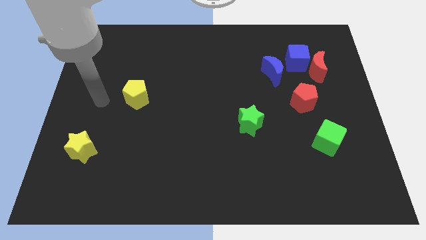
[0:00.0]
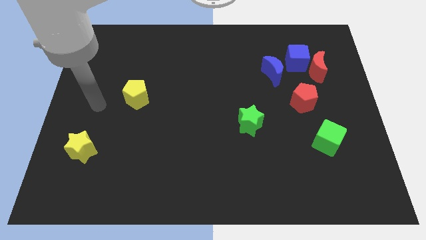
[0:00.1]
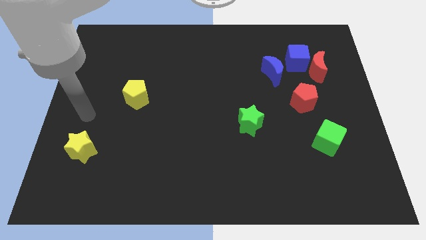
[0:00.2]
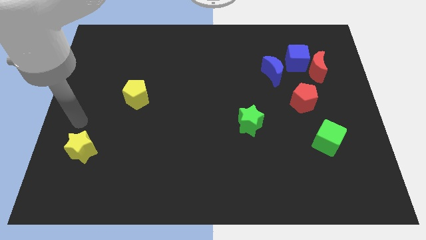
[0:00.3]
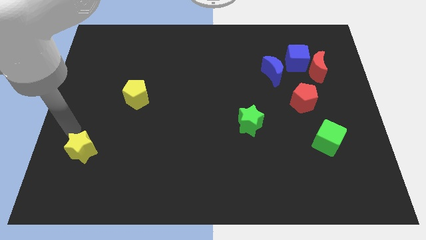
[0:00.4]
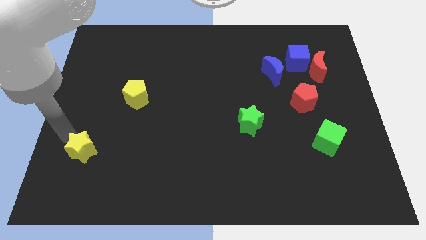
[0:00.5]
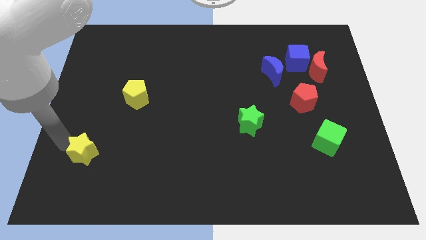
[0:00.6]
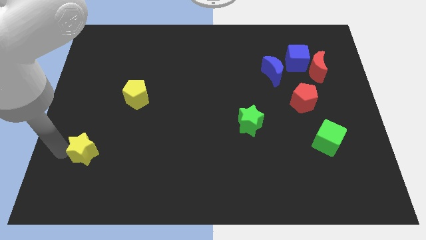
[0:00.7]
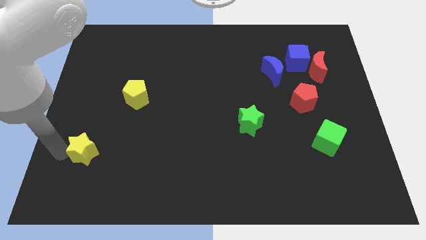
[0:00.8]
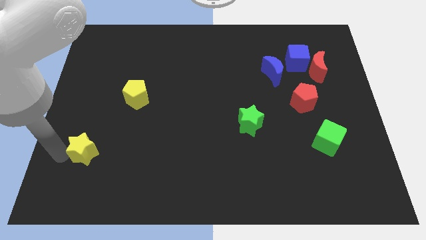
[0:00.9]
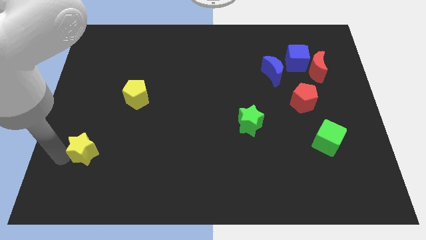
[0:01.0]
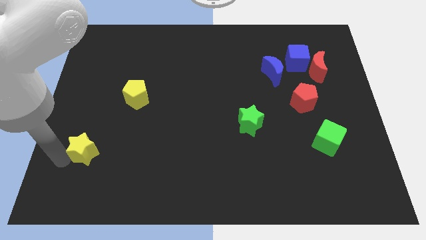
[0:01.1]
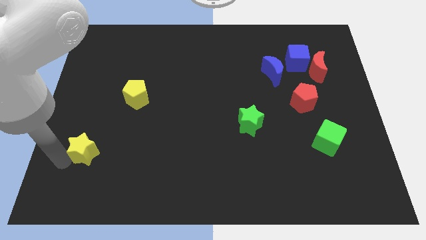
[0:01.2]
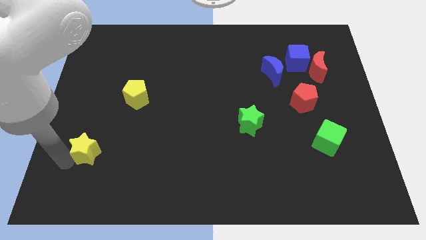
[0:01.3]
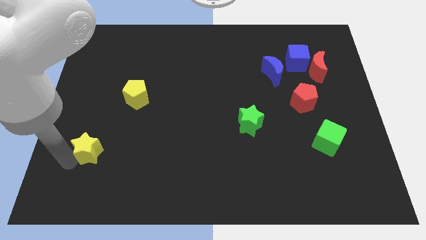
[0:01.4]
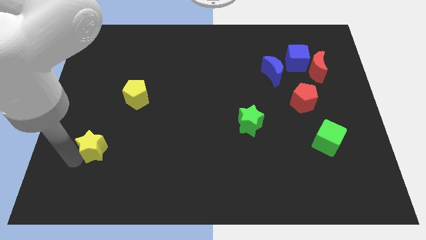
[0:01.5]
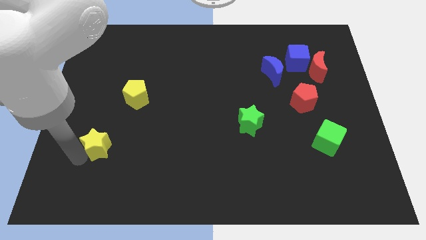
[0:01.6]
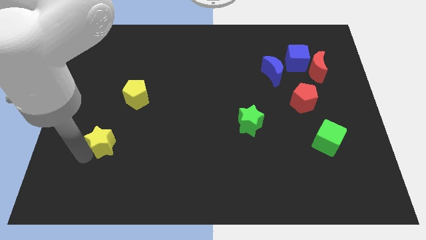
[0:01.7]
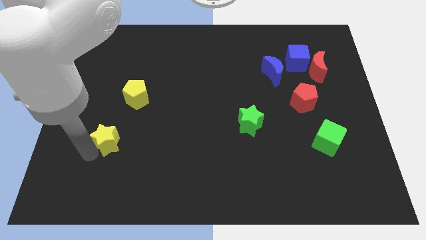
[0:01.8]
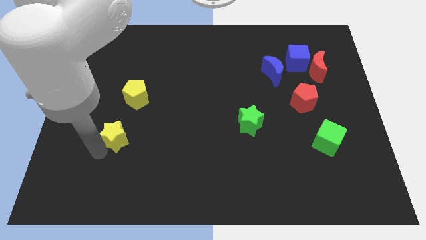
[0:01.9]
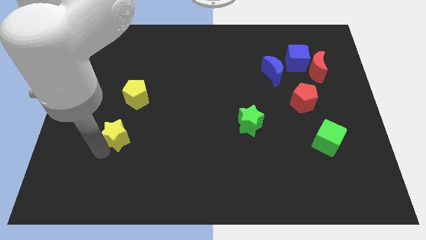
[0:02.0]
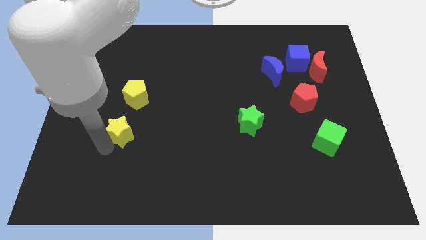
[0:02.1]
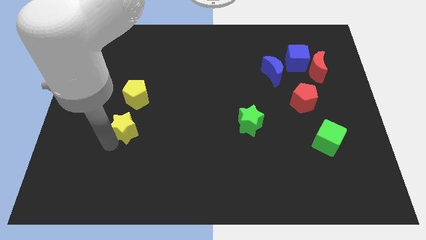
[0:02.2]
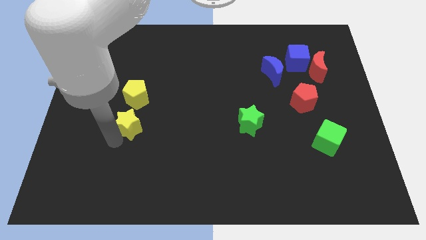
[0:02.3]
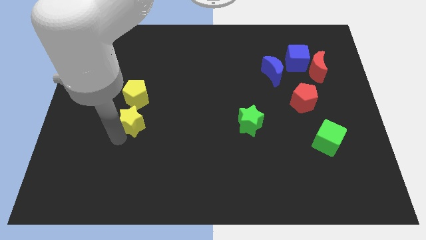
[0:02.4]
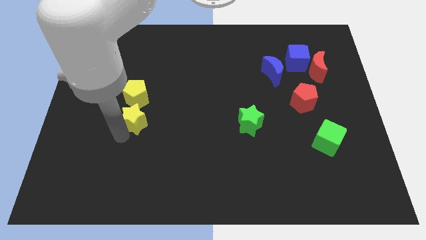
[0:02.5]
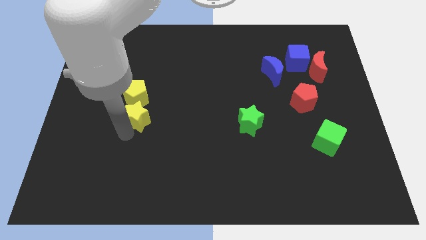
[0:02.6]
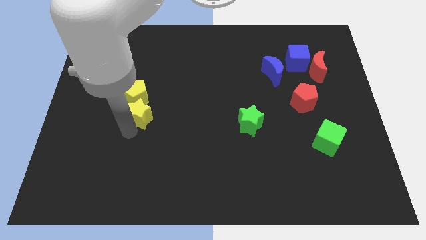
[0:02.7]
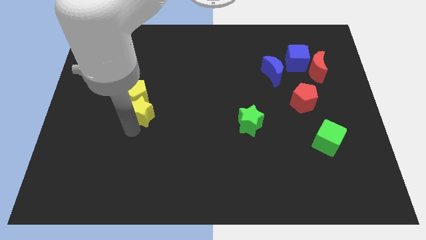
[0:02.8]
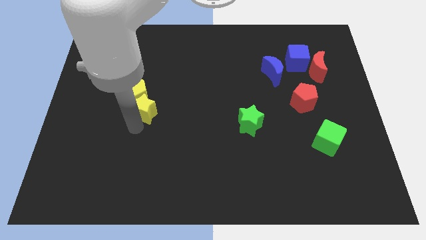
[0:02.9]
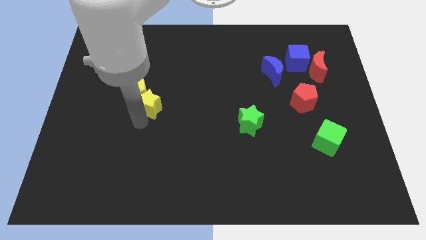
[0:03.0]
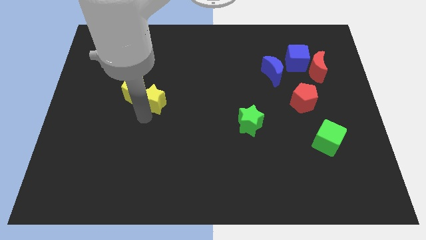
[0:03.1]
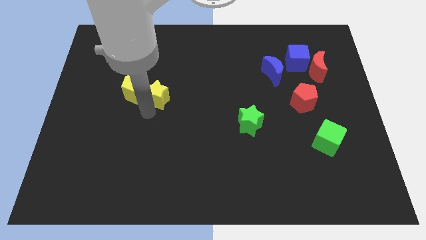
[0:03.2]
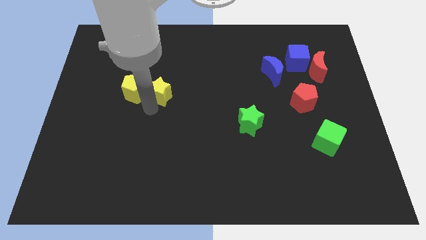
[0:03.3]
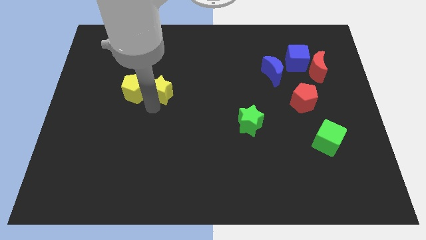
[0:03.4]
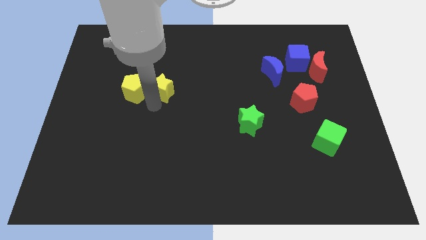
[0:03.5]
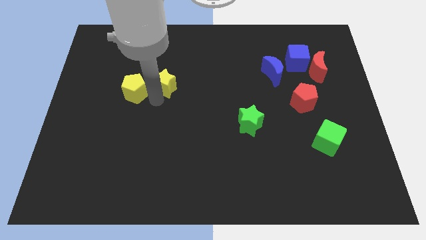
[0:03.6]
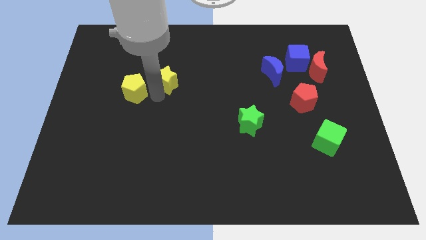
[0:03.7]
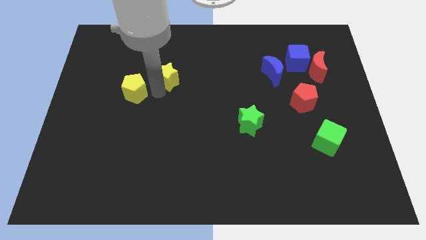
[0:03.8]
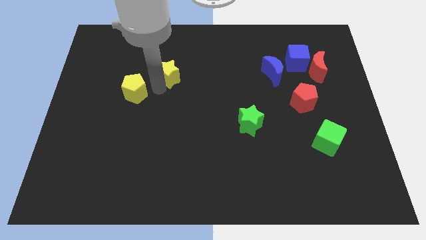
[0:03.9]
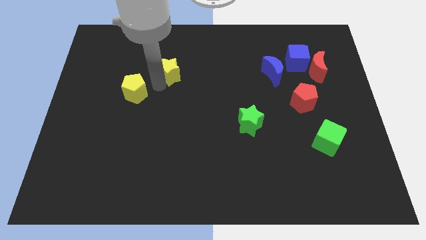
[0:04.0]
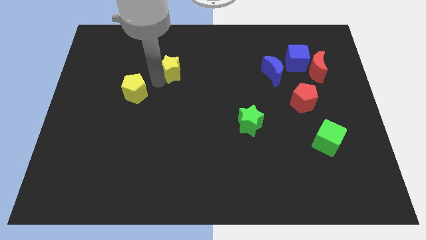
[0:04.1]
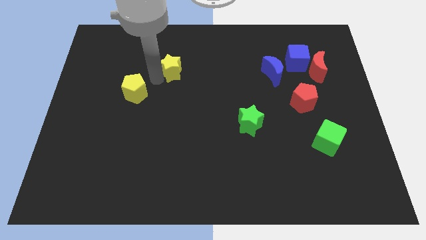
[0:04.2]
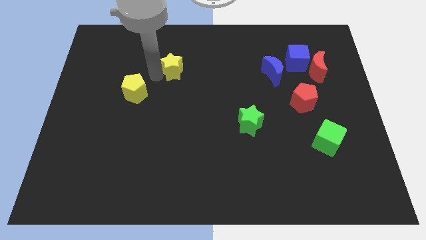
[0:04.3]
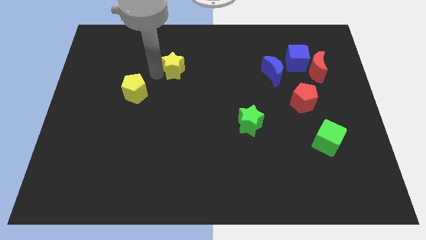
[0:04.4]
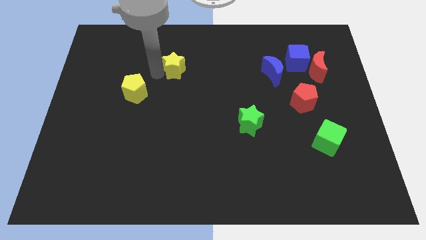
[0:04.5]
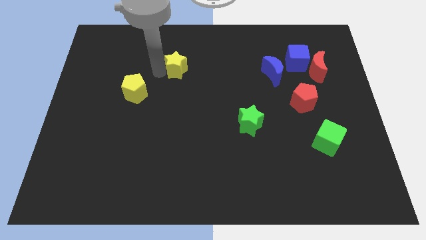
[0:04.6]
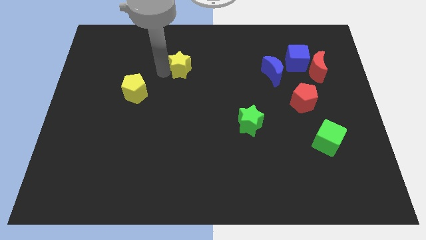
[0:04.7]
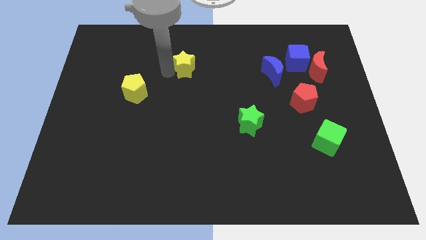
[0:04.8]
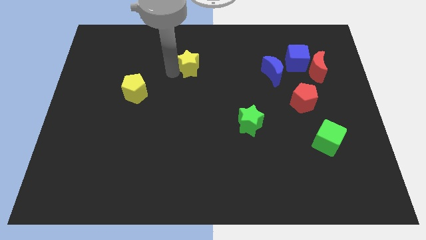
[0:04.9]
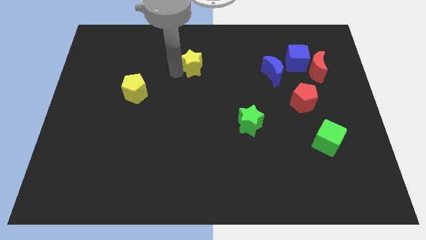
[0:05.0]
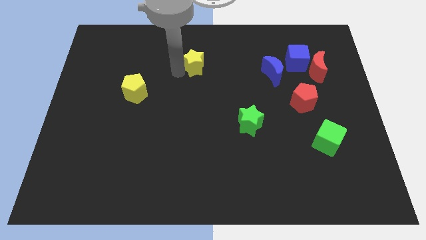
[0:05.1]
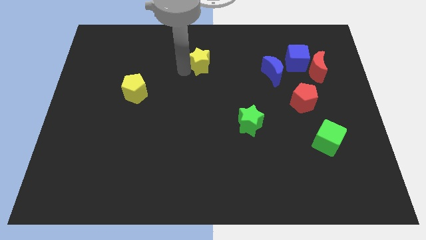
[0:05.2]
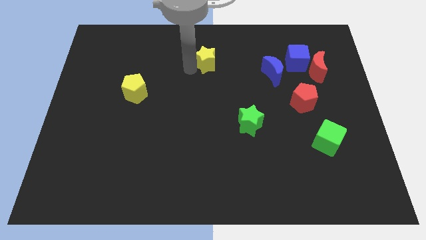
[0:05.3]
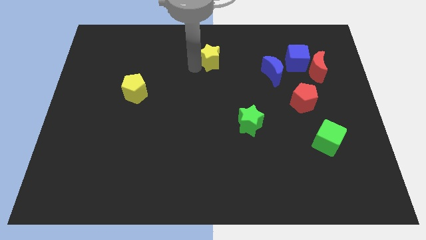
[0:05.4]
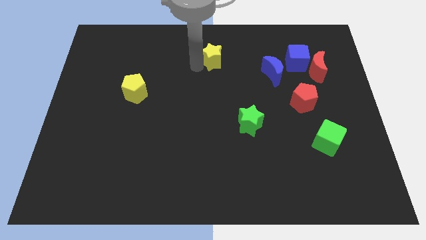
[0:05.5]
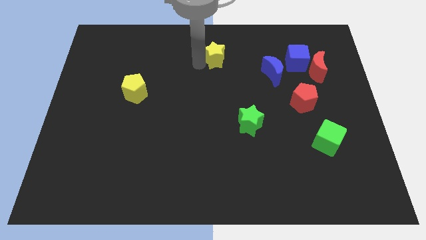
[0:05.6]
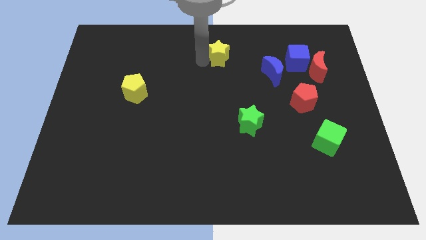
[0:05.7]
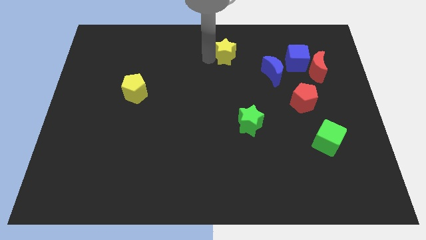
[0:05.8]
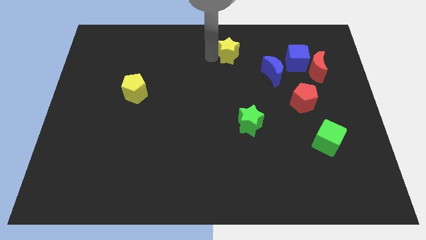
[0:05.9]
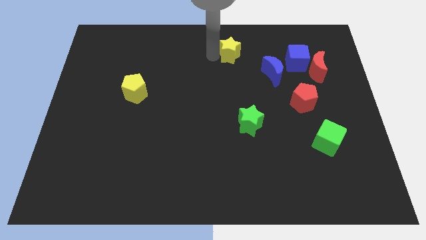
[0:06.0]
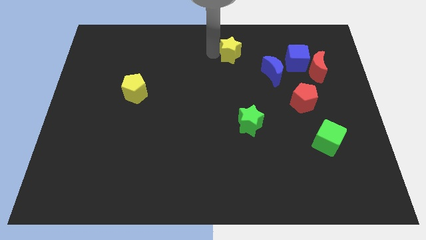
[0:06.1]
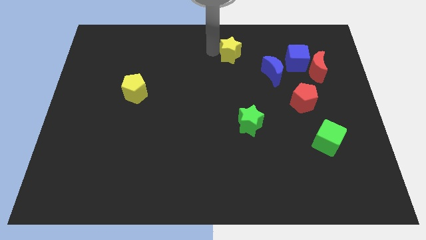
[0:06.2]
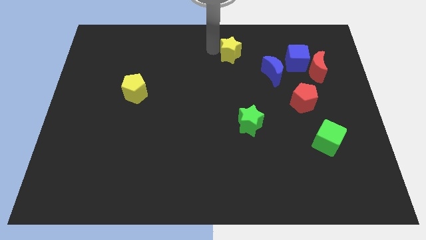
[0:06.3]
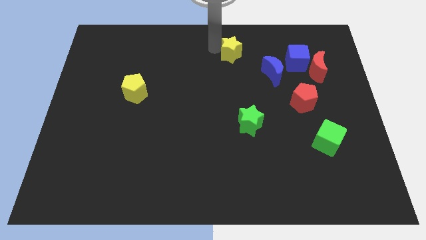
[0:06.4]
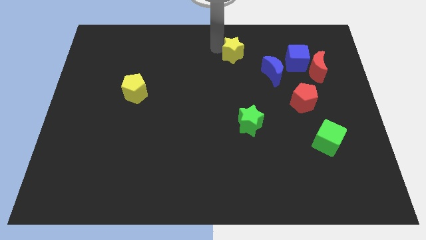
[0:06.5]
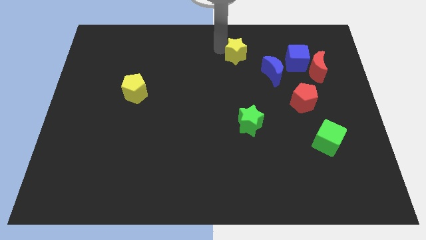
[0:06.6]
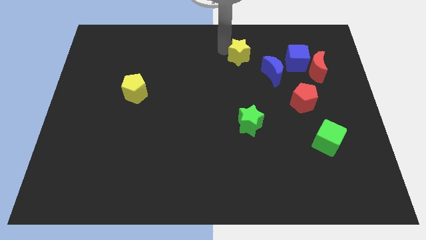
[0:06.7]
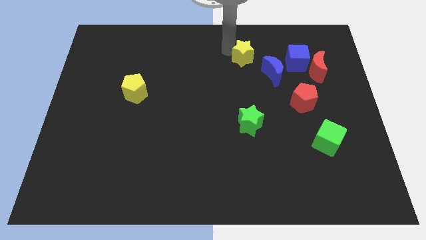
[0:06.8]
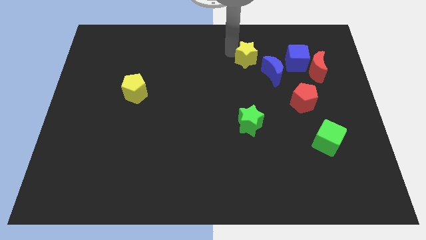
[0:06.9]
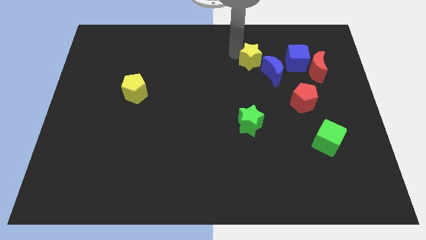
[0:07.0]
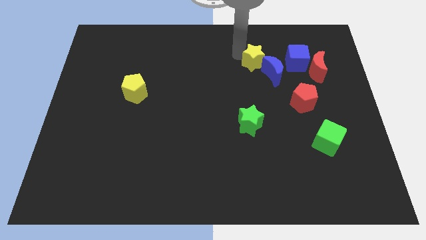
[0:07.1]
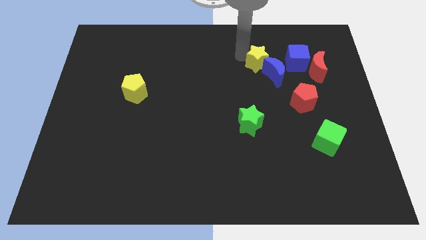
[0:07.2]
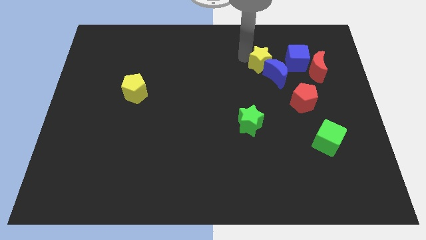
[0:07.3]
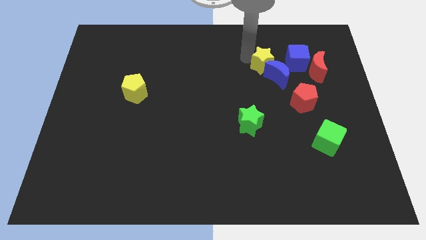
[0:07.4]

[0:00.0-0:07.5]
slide the yellow star to the blue moon

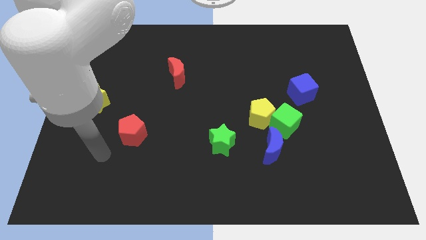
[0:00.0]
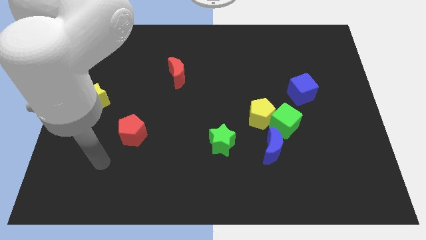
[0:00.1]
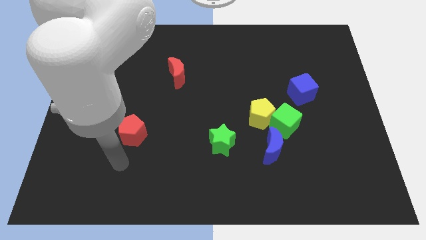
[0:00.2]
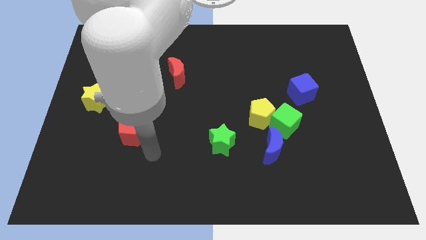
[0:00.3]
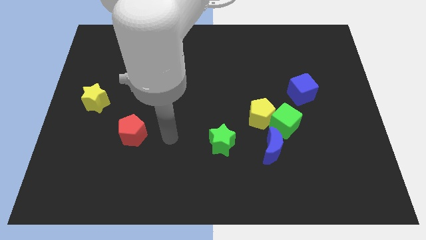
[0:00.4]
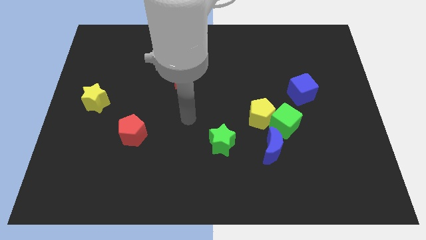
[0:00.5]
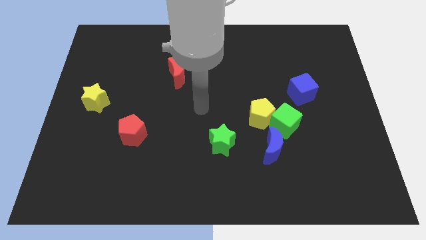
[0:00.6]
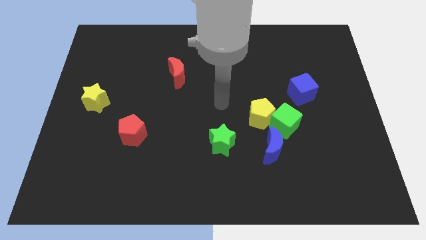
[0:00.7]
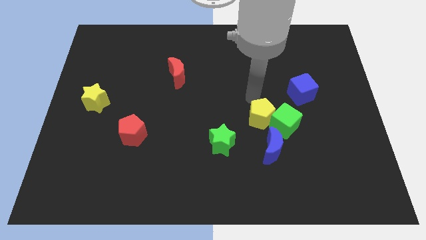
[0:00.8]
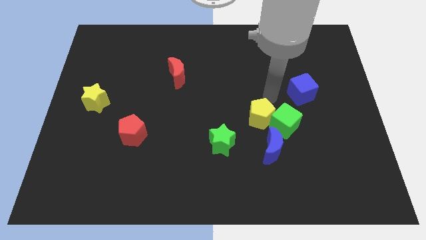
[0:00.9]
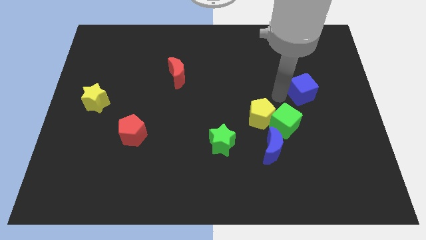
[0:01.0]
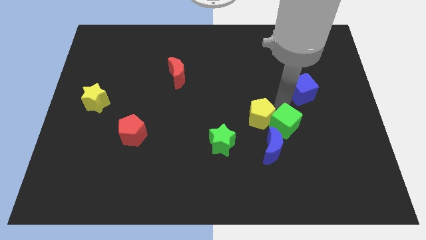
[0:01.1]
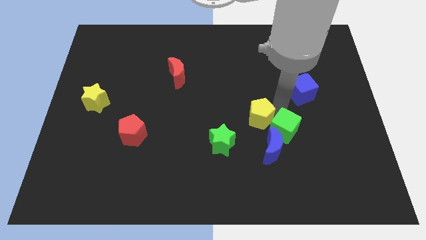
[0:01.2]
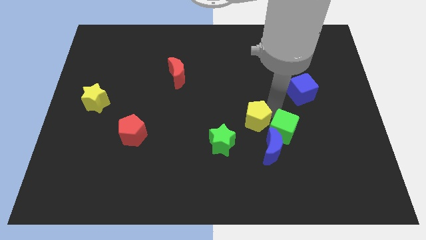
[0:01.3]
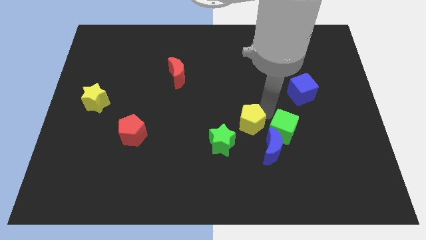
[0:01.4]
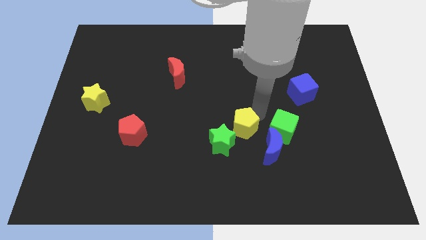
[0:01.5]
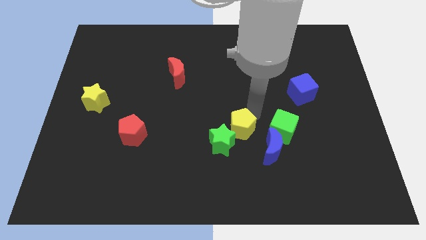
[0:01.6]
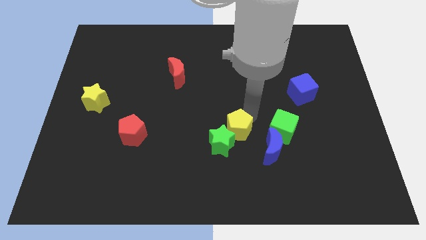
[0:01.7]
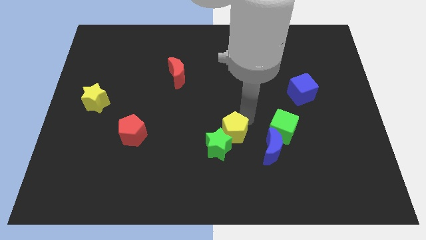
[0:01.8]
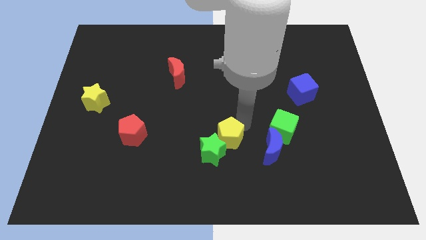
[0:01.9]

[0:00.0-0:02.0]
put the yellow pentagon to the green star
